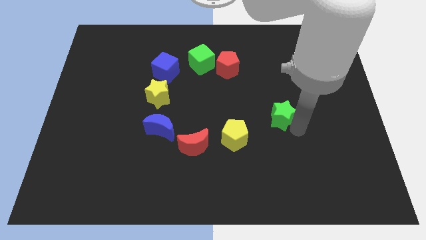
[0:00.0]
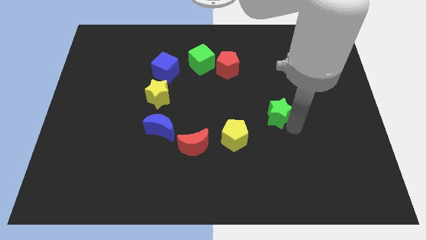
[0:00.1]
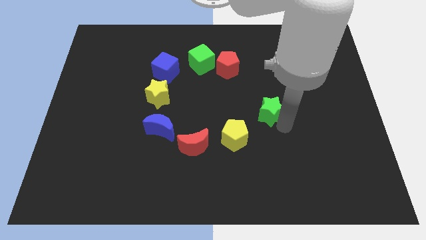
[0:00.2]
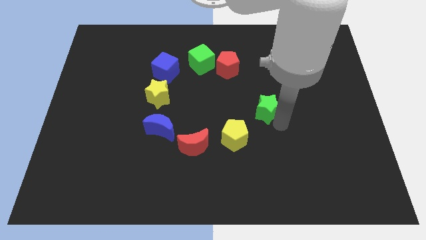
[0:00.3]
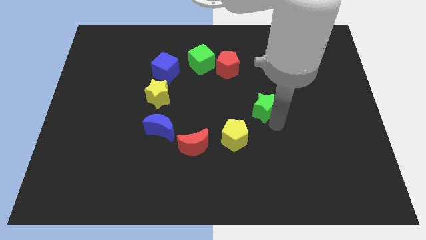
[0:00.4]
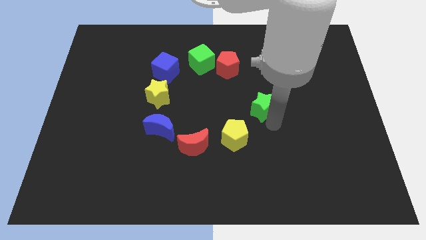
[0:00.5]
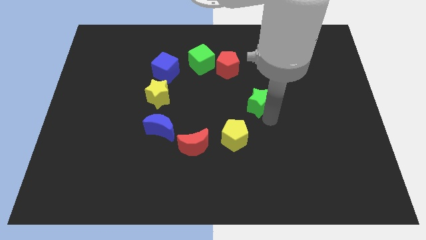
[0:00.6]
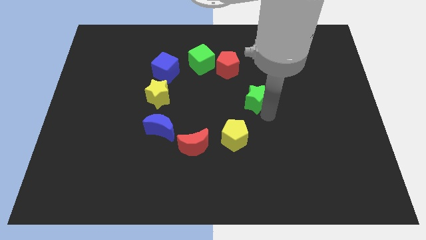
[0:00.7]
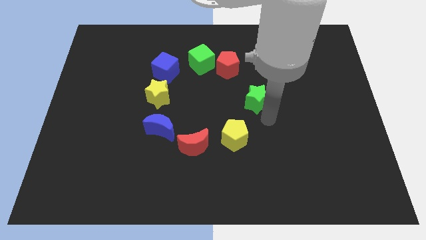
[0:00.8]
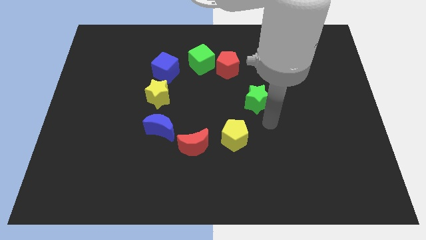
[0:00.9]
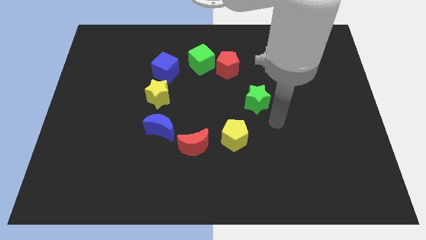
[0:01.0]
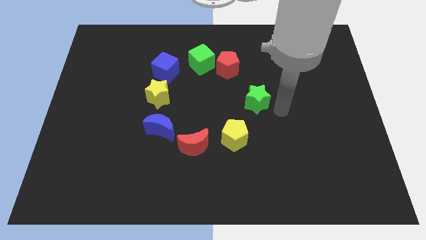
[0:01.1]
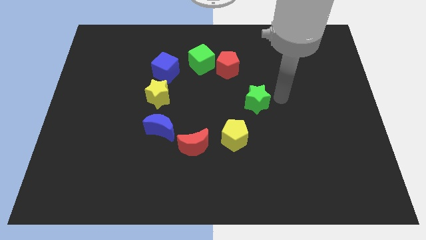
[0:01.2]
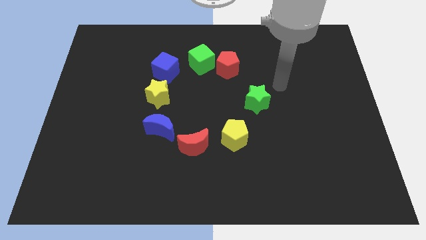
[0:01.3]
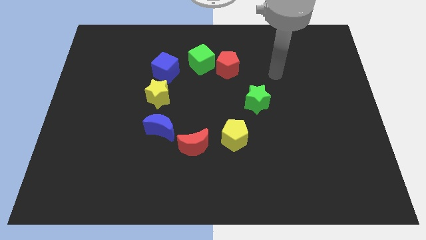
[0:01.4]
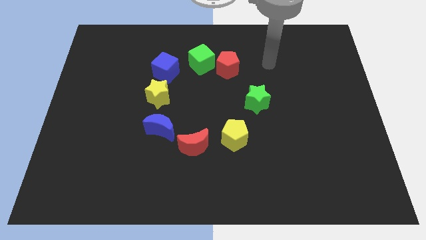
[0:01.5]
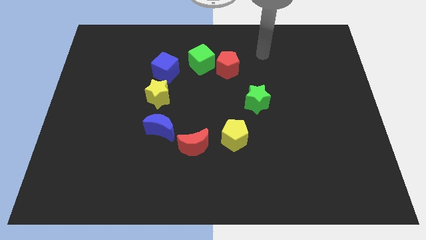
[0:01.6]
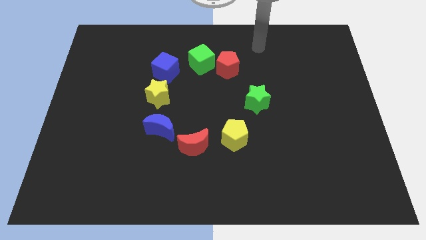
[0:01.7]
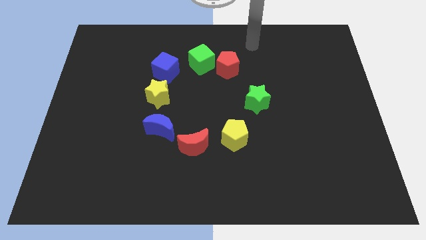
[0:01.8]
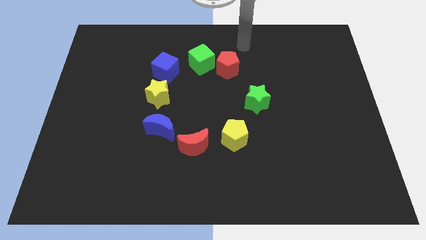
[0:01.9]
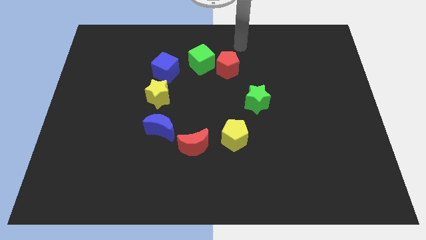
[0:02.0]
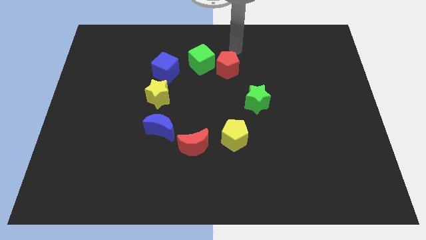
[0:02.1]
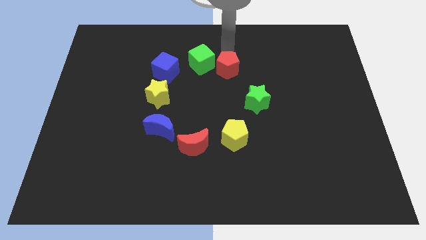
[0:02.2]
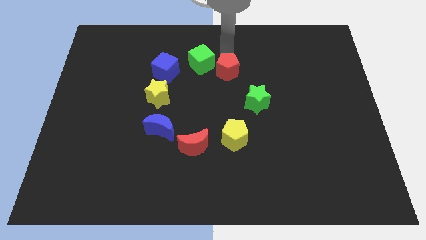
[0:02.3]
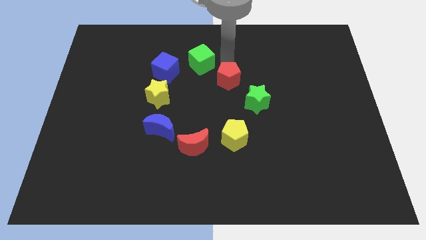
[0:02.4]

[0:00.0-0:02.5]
move the green star towards red pentagon

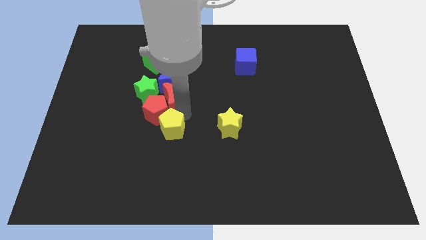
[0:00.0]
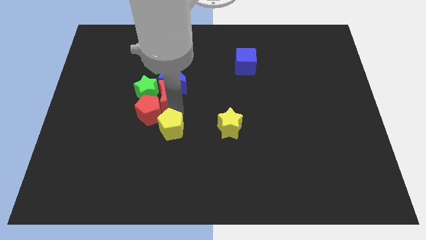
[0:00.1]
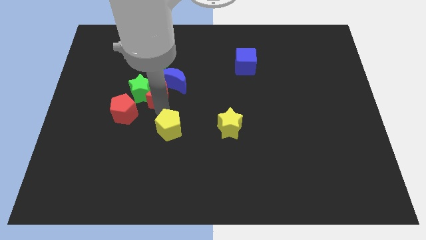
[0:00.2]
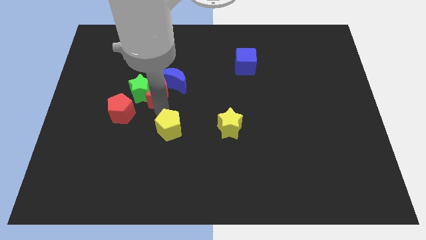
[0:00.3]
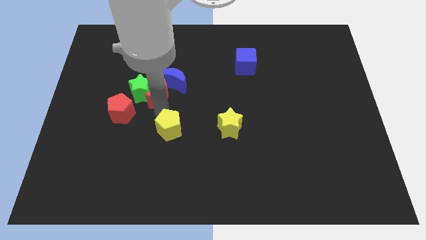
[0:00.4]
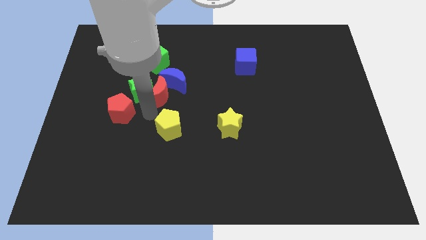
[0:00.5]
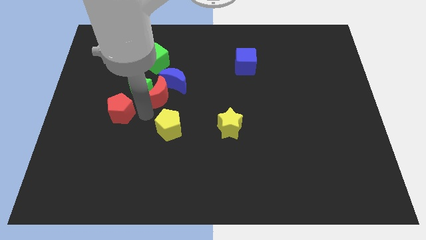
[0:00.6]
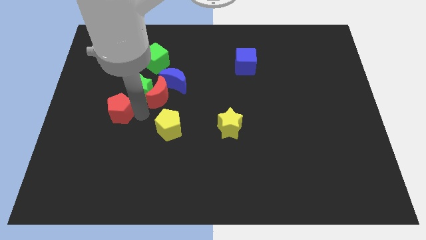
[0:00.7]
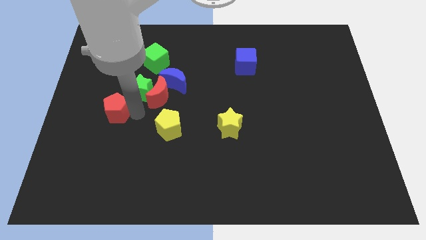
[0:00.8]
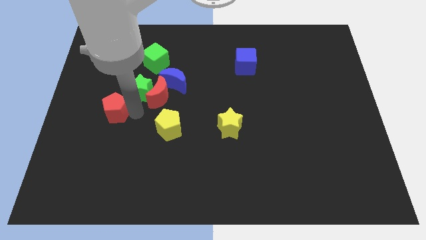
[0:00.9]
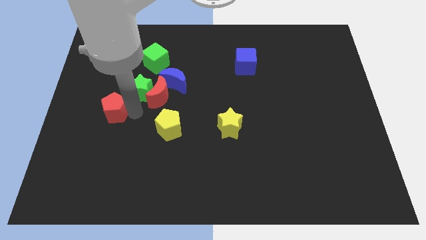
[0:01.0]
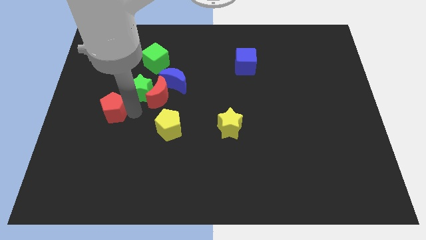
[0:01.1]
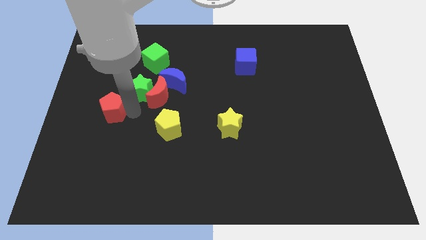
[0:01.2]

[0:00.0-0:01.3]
separate the red blocks

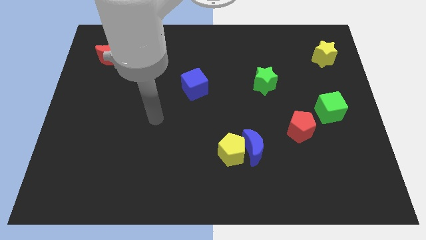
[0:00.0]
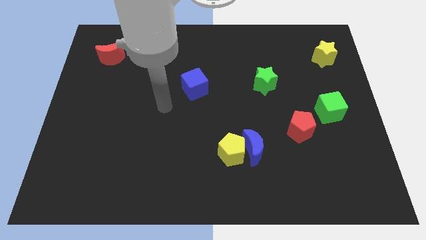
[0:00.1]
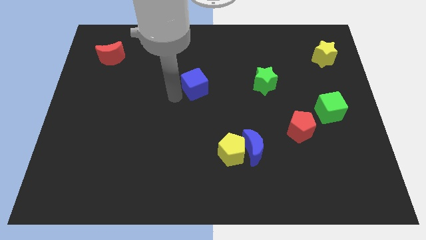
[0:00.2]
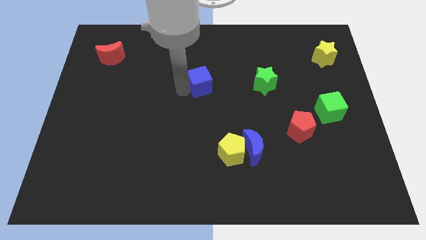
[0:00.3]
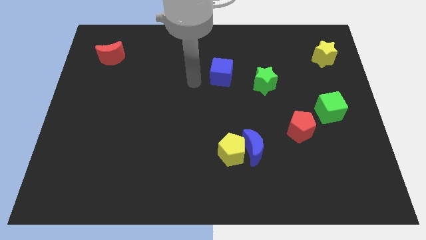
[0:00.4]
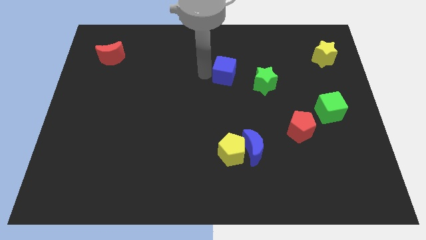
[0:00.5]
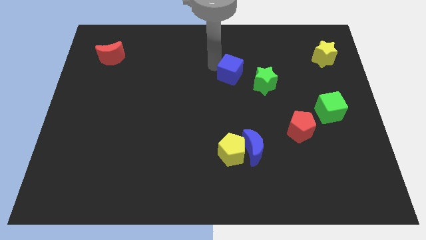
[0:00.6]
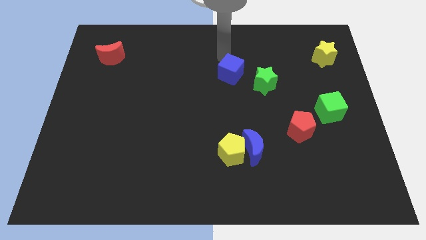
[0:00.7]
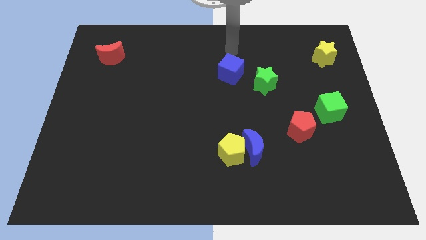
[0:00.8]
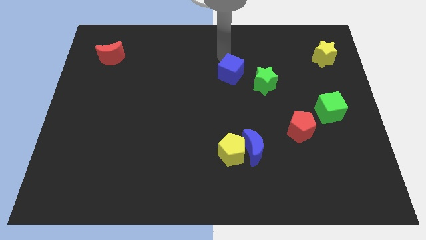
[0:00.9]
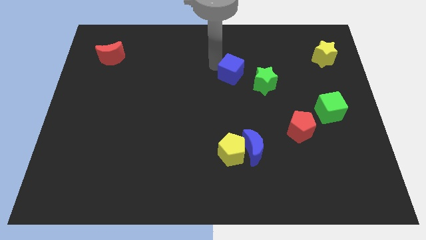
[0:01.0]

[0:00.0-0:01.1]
place the blue cube diagonal to the green star at the top left side

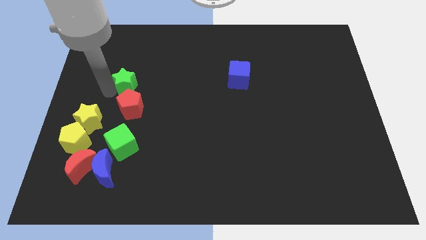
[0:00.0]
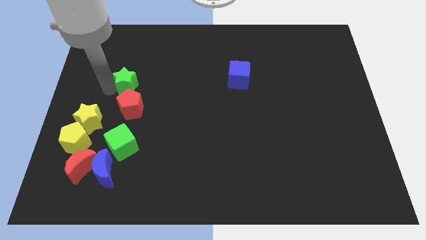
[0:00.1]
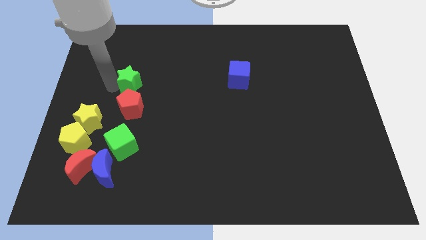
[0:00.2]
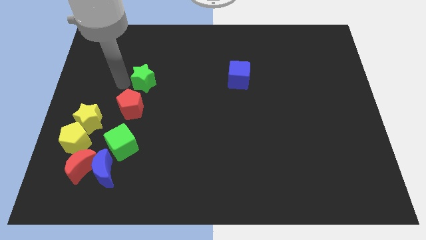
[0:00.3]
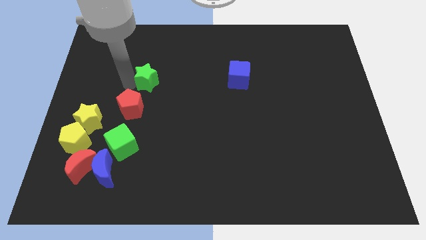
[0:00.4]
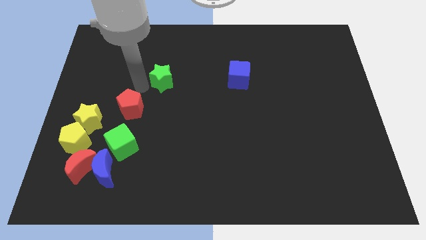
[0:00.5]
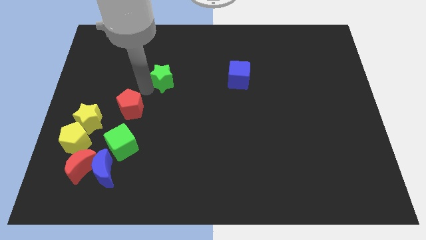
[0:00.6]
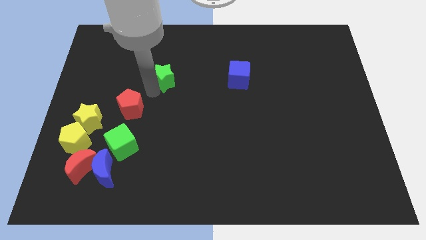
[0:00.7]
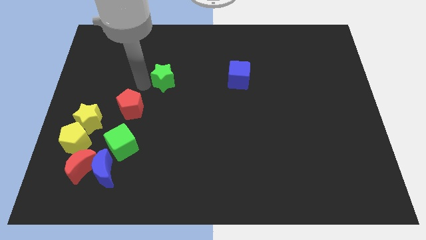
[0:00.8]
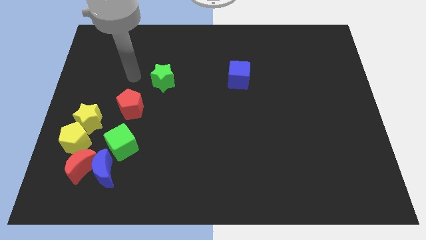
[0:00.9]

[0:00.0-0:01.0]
push the green star away from the red pentagon

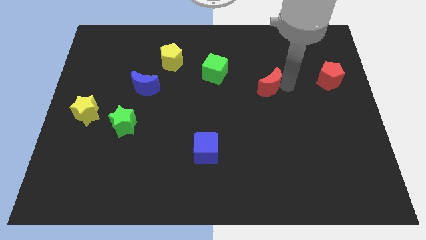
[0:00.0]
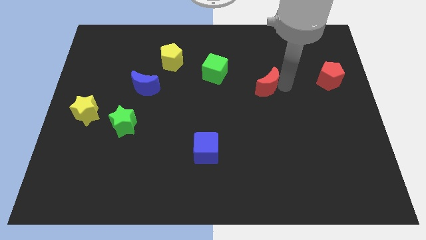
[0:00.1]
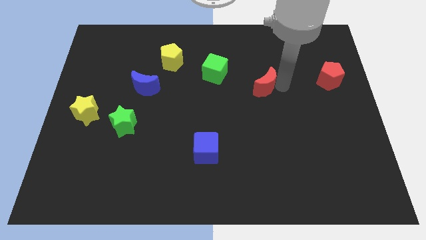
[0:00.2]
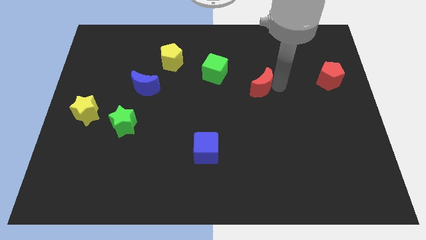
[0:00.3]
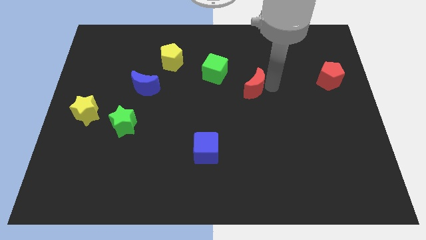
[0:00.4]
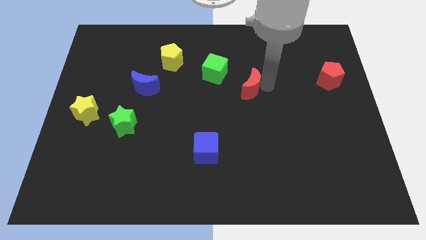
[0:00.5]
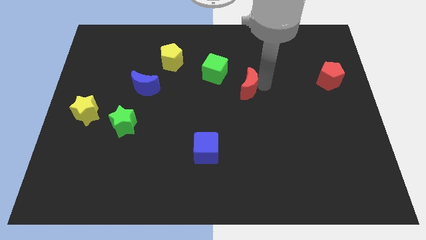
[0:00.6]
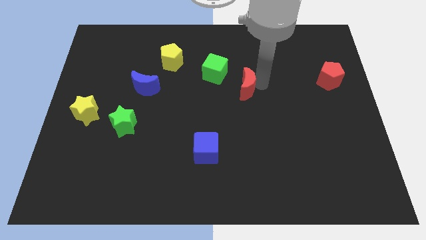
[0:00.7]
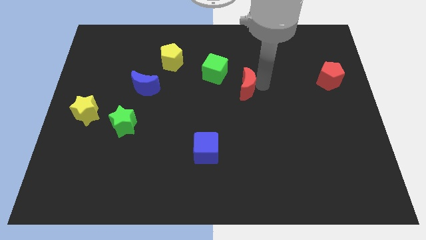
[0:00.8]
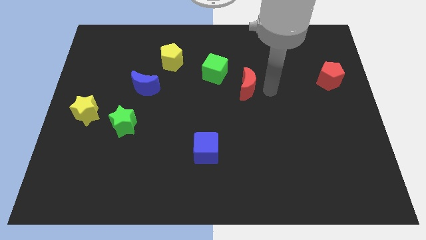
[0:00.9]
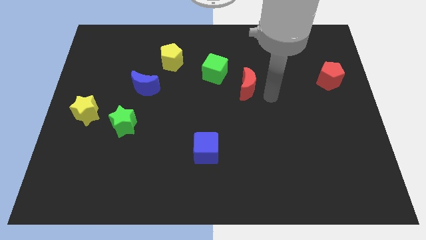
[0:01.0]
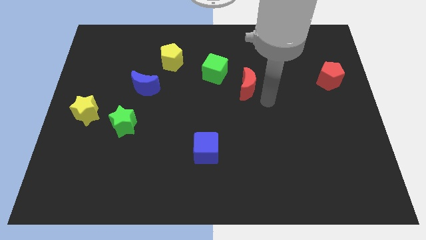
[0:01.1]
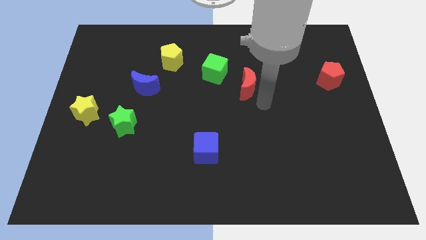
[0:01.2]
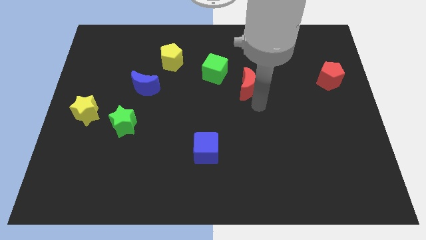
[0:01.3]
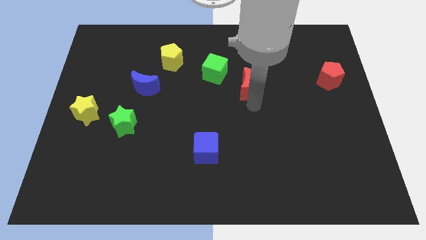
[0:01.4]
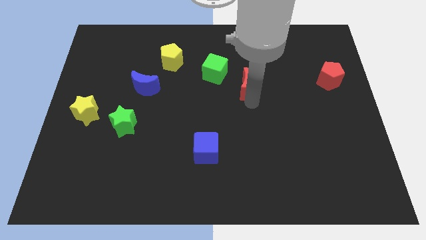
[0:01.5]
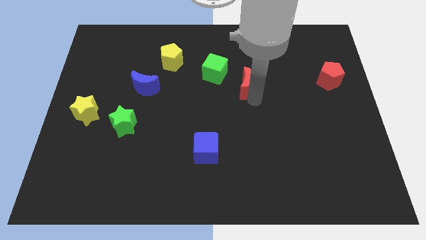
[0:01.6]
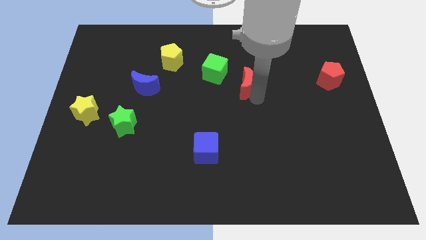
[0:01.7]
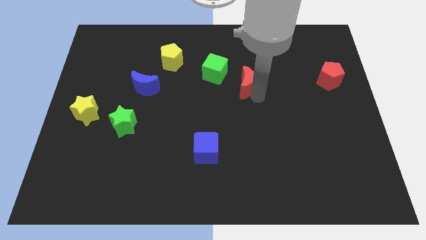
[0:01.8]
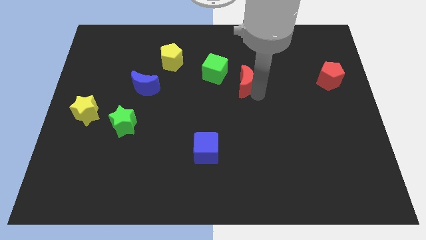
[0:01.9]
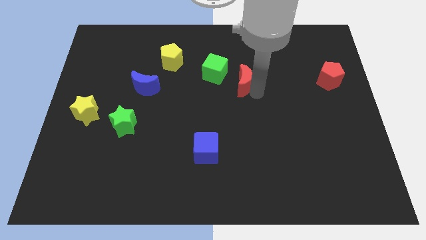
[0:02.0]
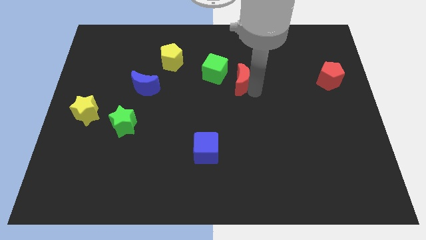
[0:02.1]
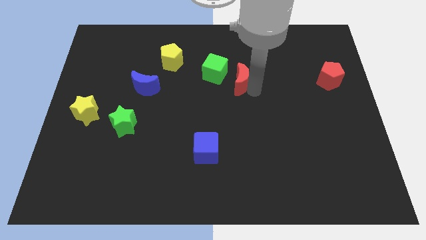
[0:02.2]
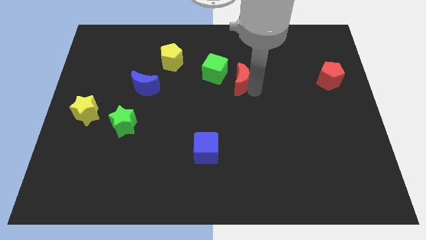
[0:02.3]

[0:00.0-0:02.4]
move the red crescent near the green cube

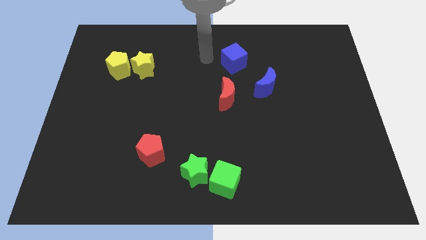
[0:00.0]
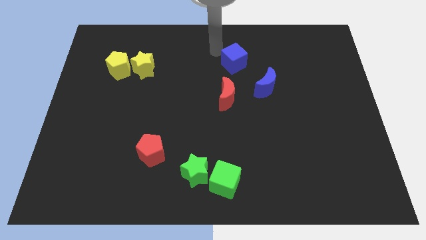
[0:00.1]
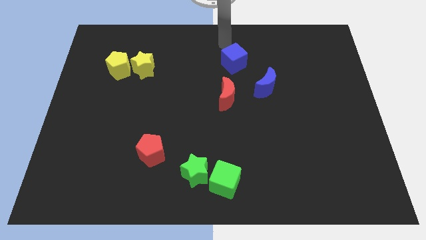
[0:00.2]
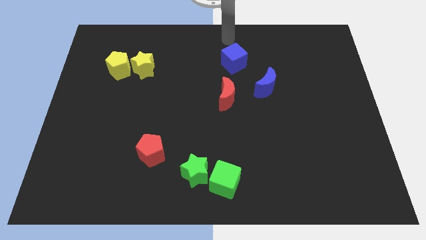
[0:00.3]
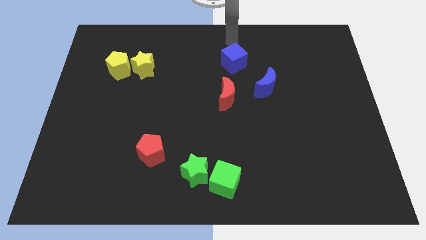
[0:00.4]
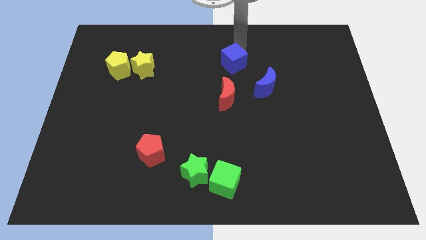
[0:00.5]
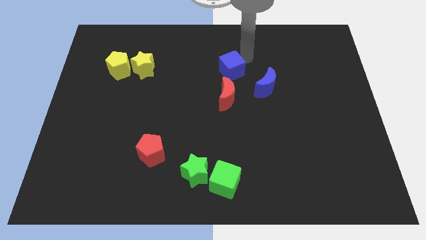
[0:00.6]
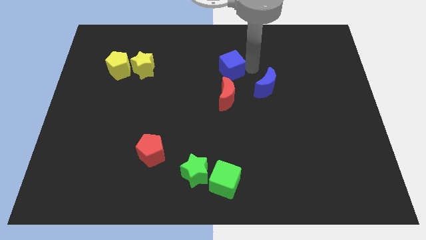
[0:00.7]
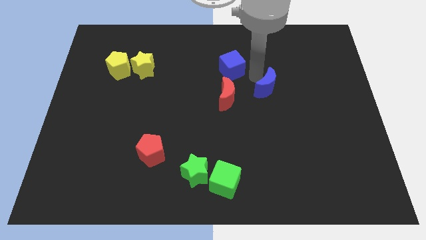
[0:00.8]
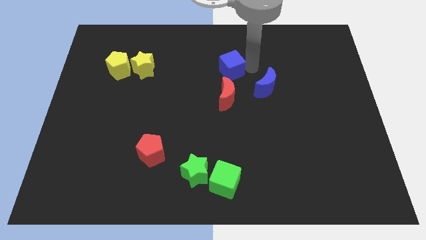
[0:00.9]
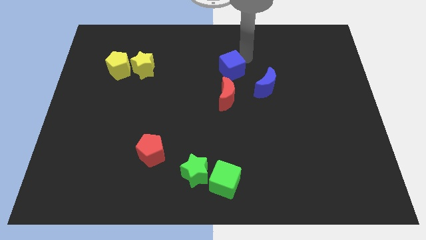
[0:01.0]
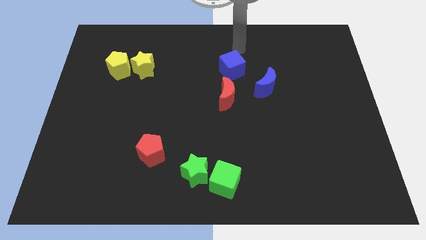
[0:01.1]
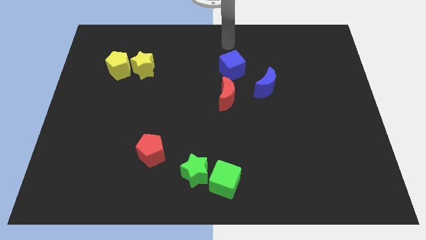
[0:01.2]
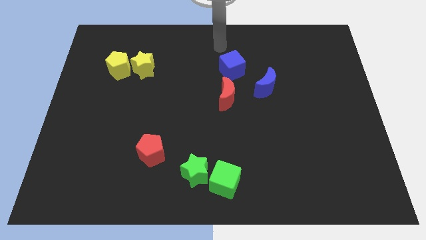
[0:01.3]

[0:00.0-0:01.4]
push the blue cube to the top of the red moon
